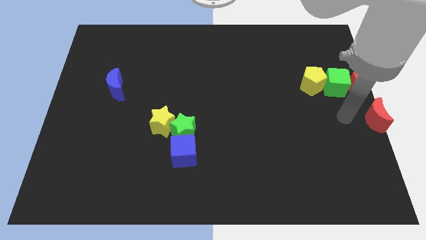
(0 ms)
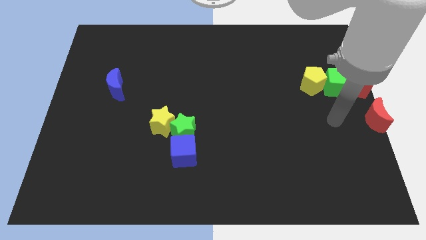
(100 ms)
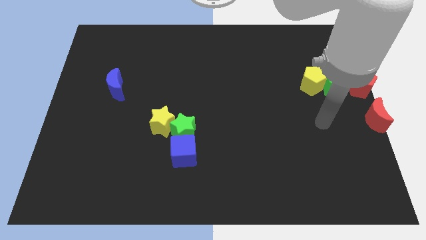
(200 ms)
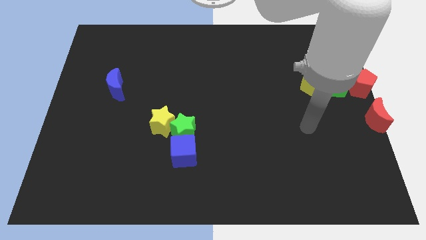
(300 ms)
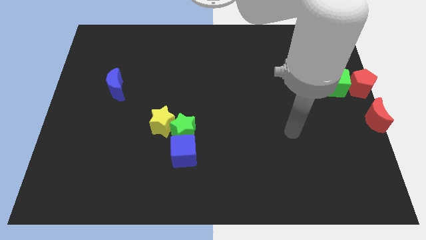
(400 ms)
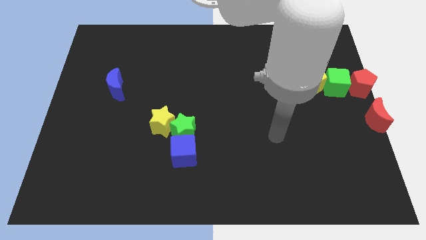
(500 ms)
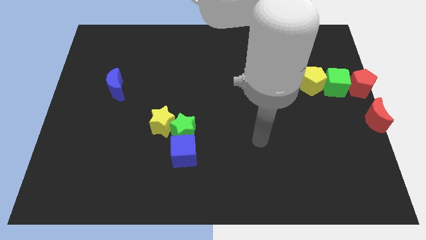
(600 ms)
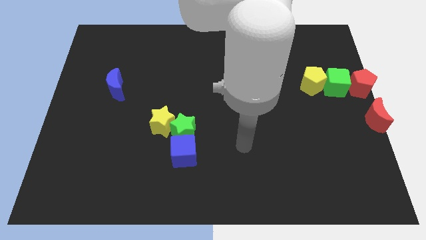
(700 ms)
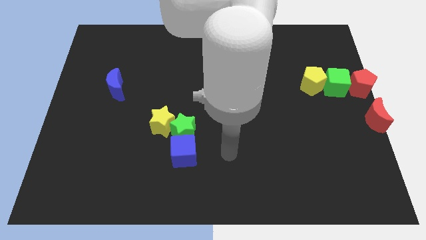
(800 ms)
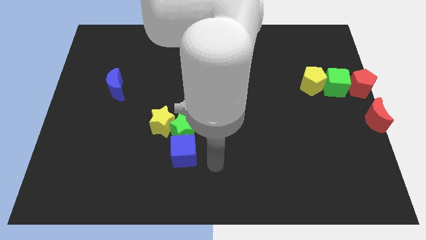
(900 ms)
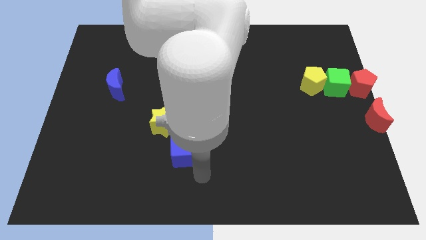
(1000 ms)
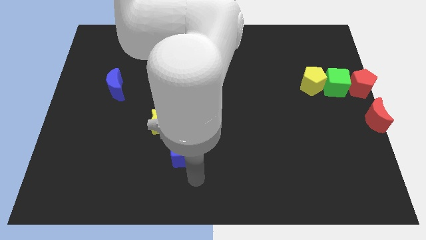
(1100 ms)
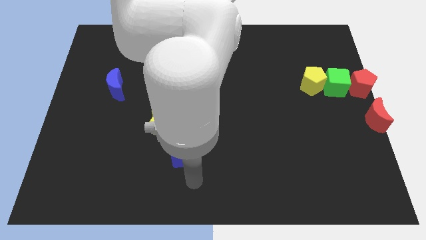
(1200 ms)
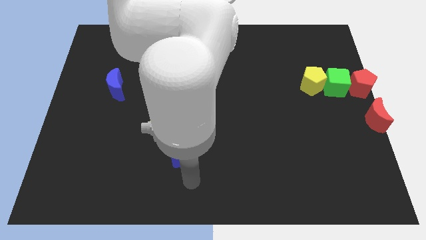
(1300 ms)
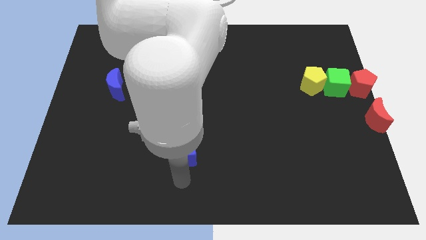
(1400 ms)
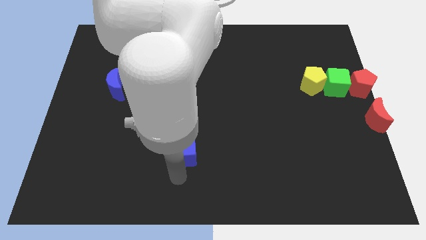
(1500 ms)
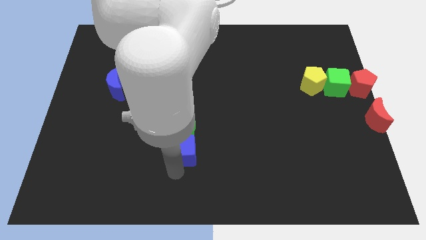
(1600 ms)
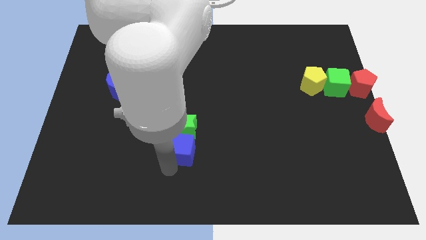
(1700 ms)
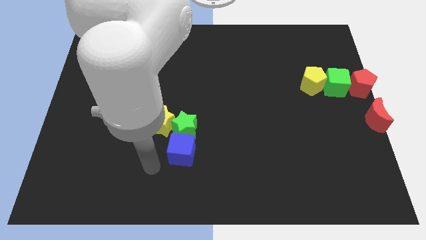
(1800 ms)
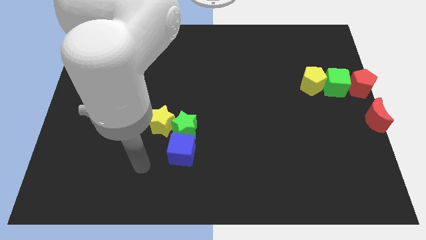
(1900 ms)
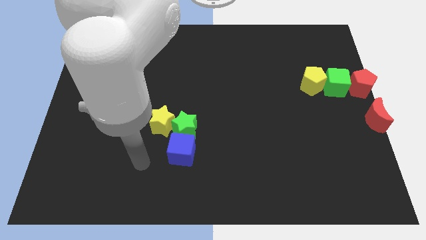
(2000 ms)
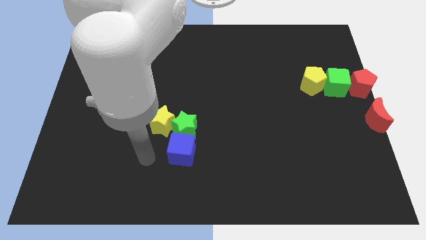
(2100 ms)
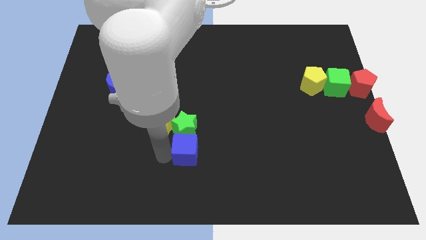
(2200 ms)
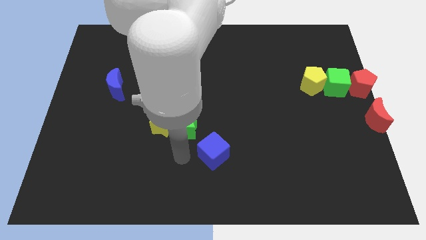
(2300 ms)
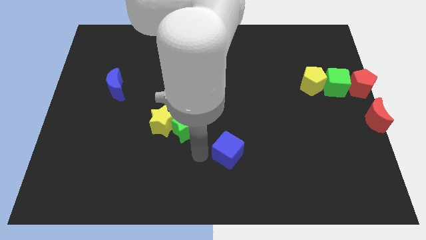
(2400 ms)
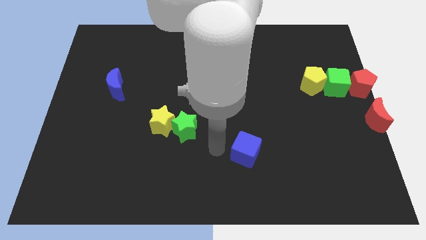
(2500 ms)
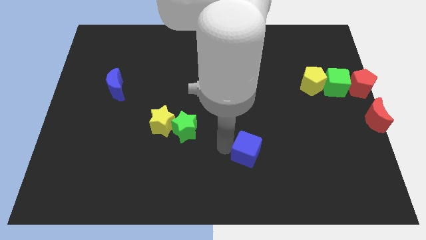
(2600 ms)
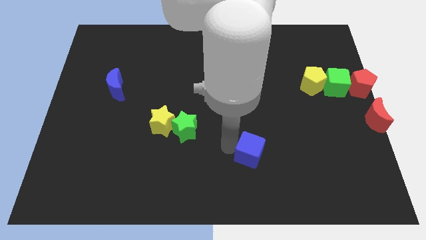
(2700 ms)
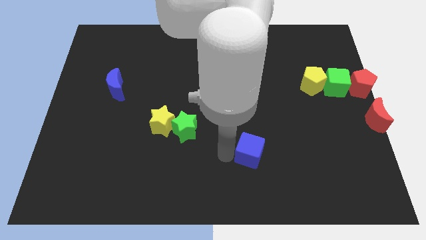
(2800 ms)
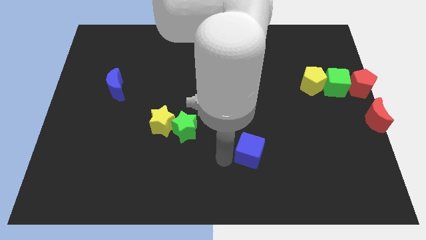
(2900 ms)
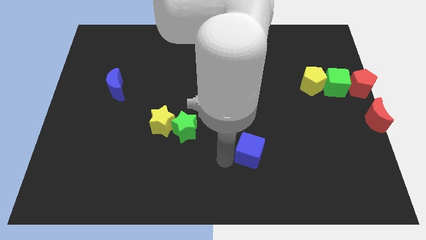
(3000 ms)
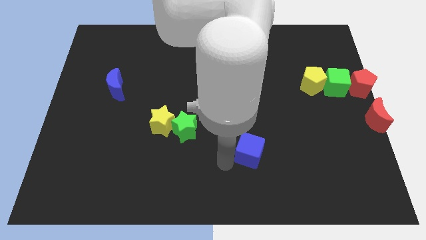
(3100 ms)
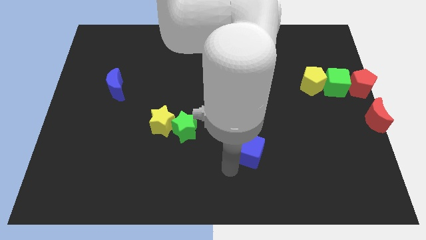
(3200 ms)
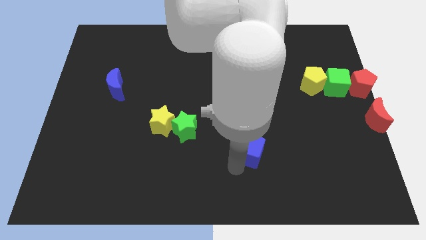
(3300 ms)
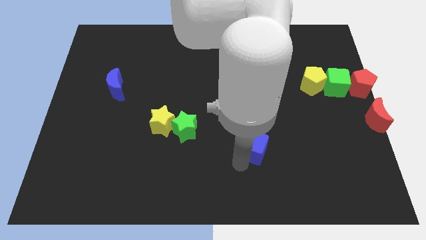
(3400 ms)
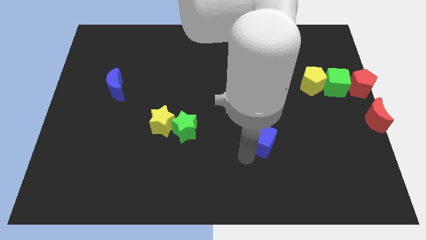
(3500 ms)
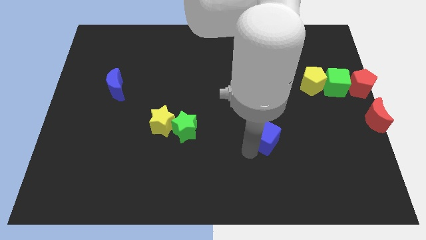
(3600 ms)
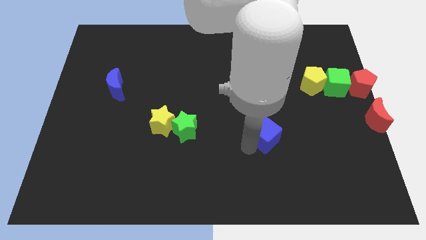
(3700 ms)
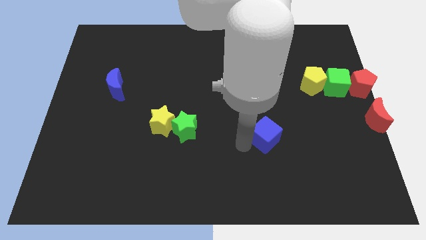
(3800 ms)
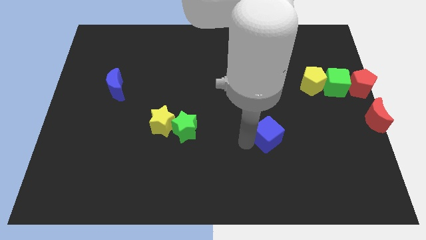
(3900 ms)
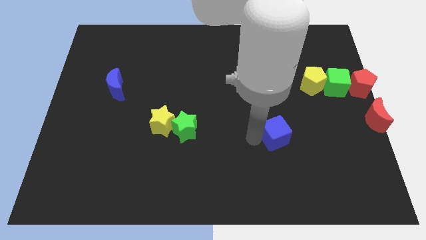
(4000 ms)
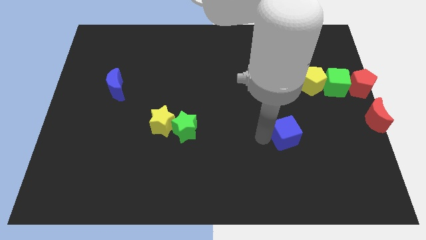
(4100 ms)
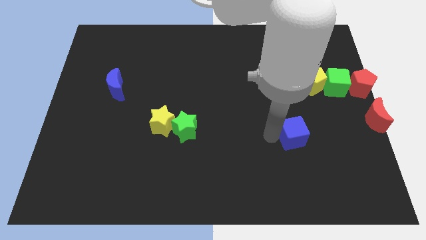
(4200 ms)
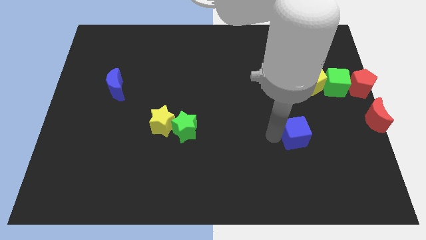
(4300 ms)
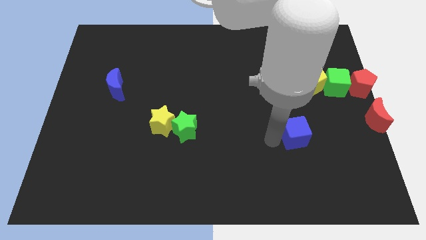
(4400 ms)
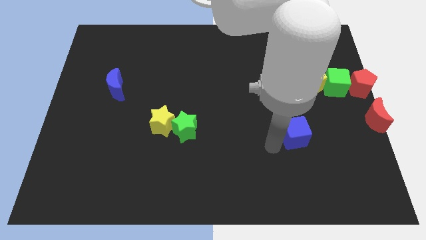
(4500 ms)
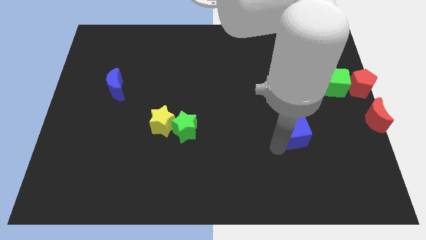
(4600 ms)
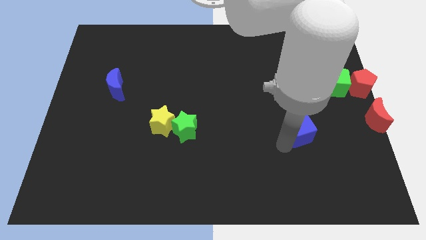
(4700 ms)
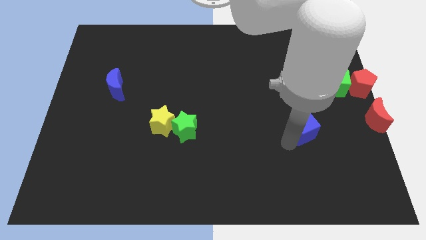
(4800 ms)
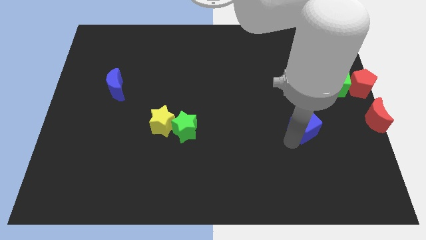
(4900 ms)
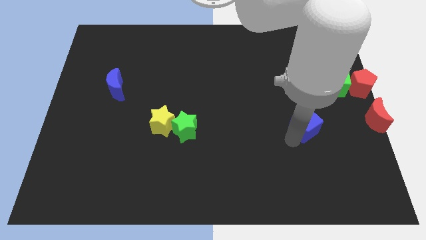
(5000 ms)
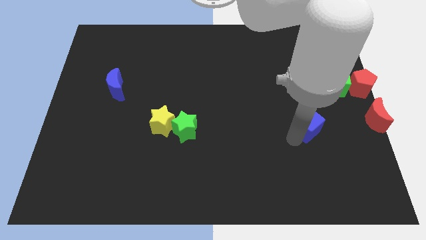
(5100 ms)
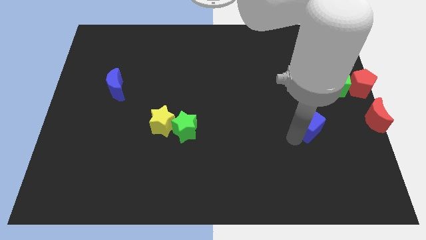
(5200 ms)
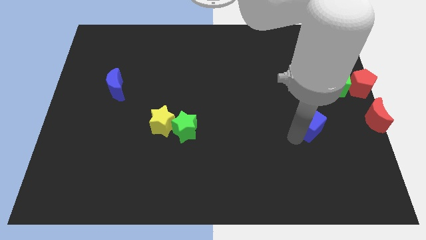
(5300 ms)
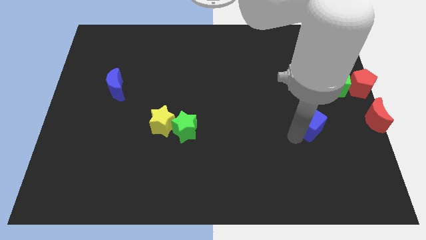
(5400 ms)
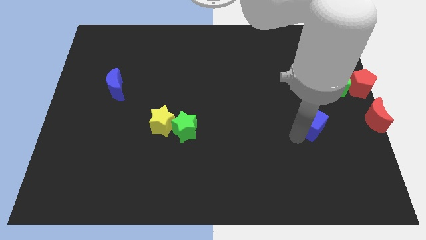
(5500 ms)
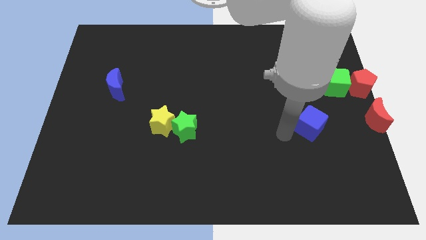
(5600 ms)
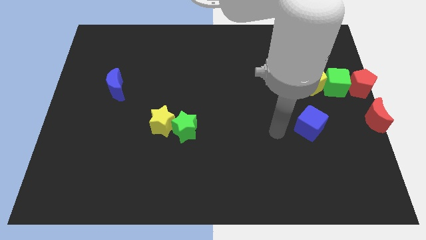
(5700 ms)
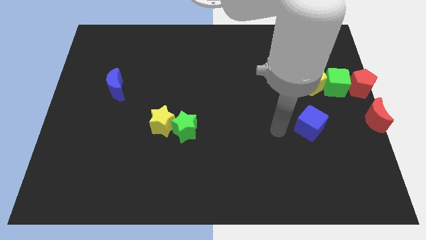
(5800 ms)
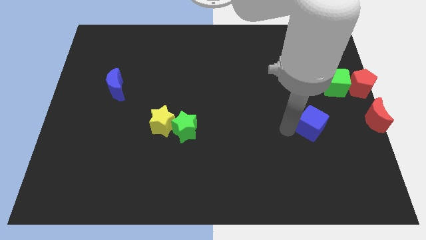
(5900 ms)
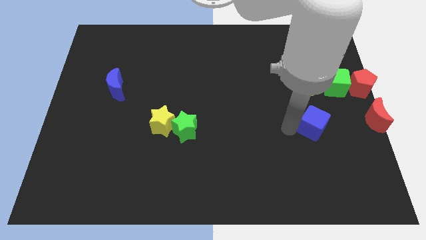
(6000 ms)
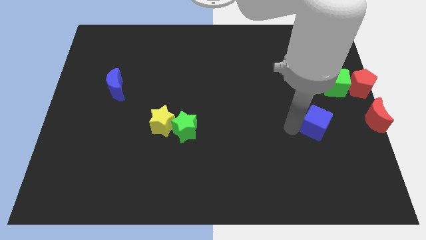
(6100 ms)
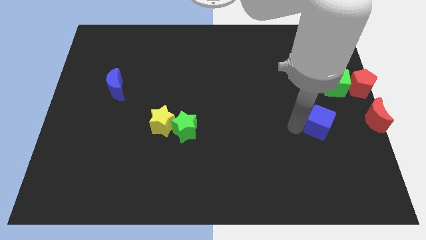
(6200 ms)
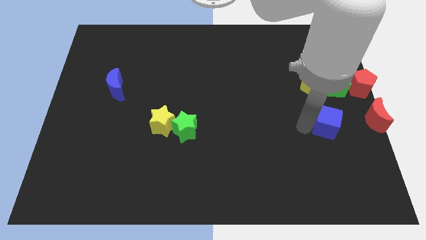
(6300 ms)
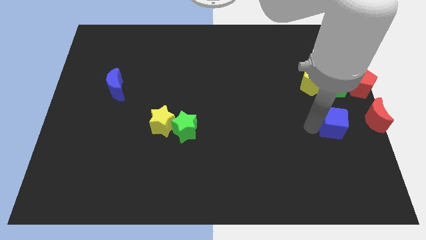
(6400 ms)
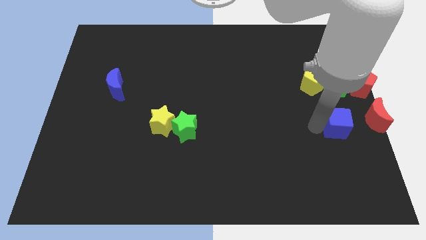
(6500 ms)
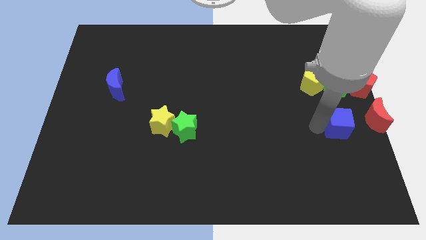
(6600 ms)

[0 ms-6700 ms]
push the blue cube left to the red crescent

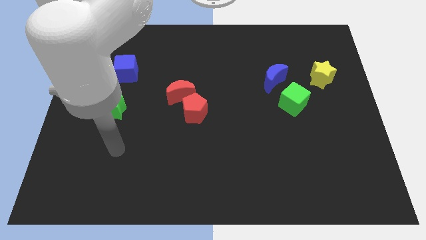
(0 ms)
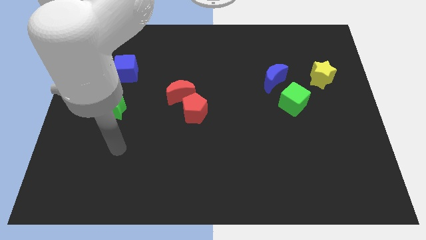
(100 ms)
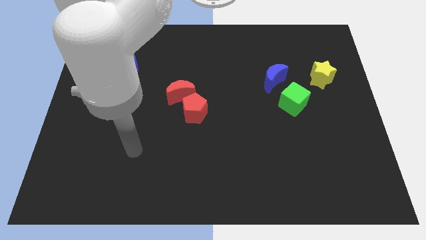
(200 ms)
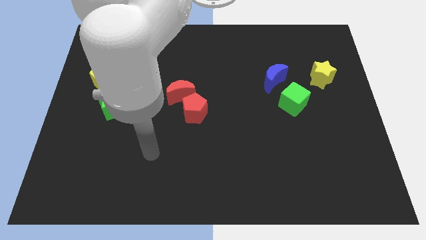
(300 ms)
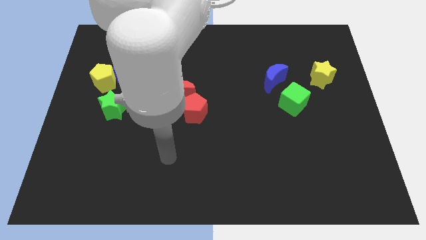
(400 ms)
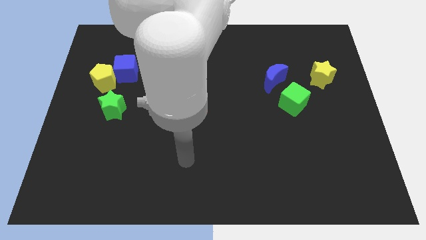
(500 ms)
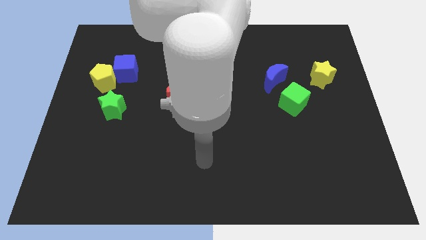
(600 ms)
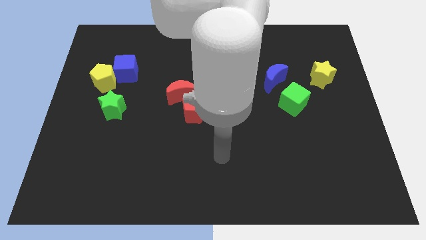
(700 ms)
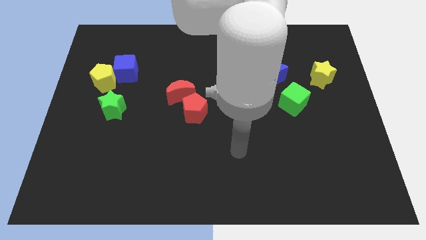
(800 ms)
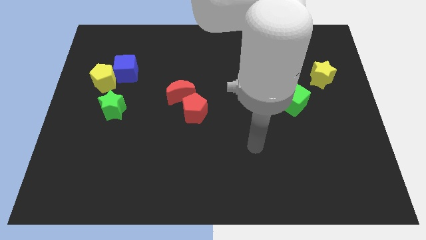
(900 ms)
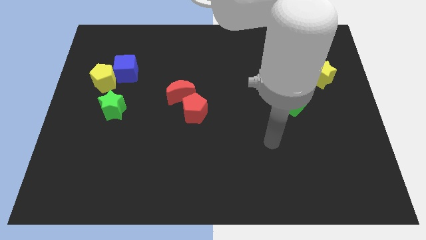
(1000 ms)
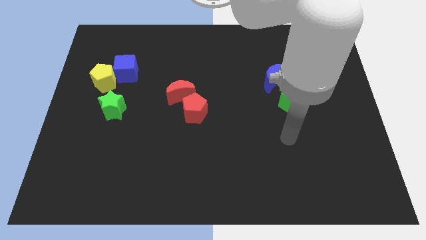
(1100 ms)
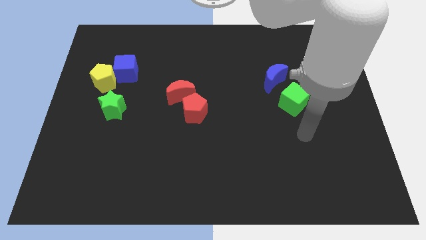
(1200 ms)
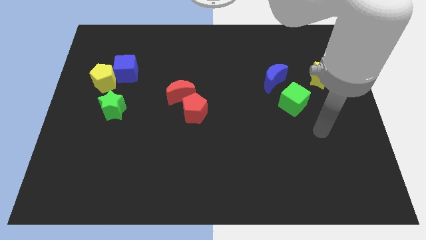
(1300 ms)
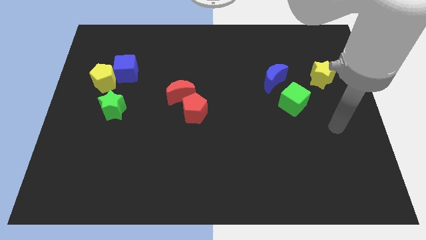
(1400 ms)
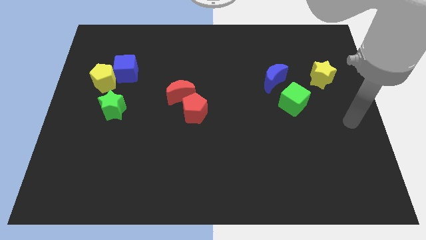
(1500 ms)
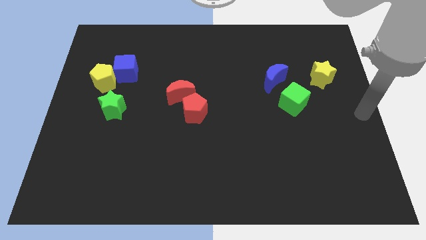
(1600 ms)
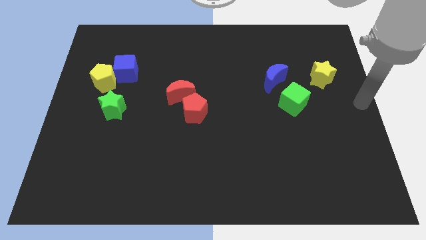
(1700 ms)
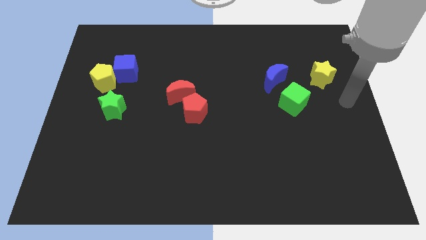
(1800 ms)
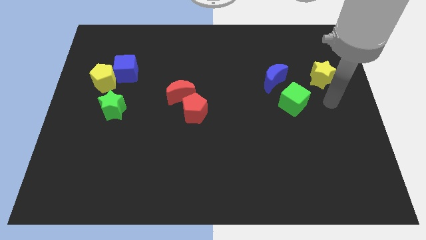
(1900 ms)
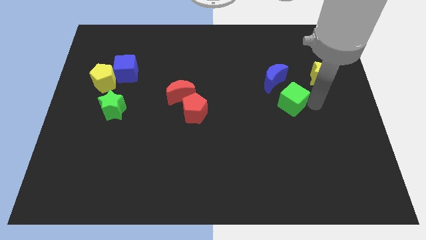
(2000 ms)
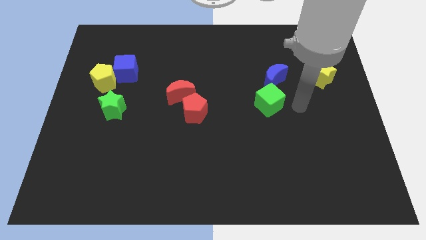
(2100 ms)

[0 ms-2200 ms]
push the green cube slightly to the left
